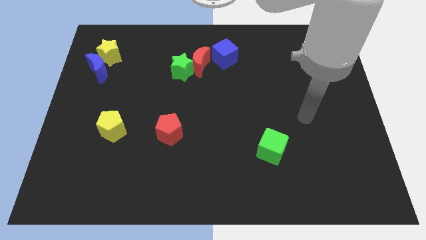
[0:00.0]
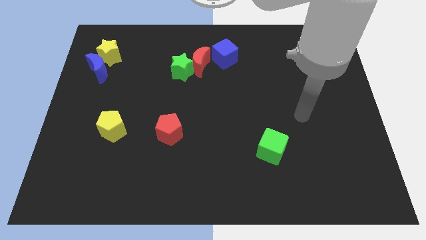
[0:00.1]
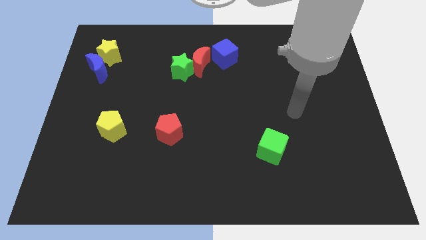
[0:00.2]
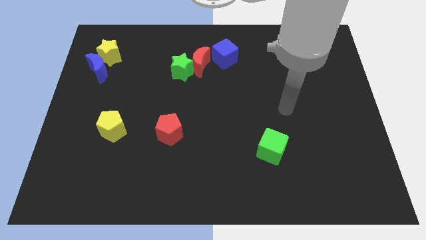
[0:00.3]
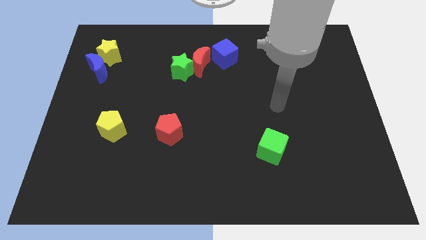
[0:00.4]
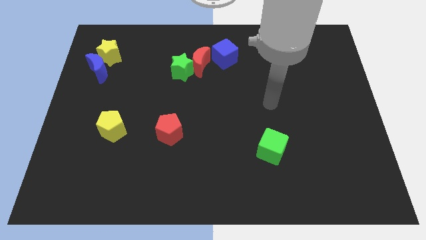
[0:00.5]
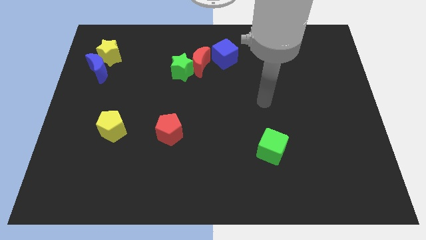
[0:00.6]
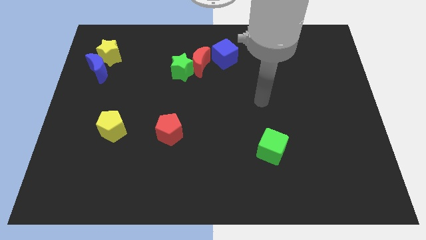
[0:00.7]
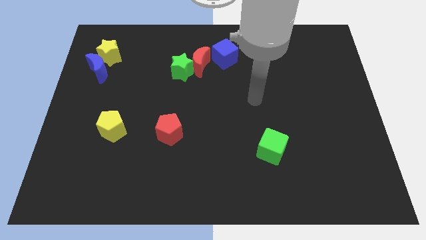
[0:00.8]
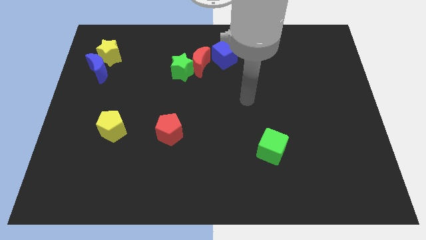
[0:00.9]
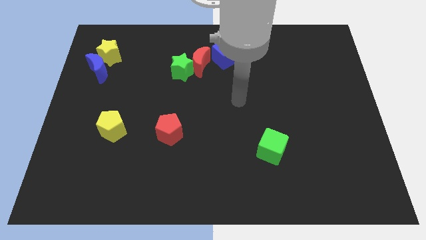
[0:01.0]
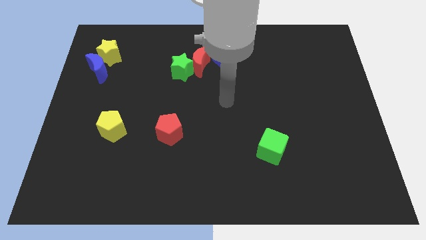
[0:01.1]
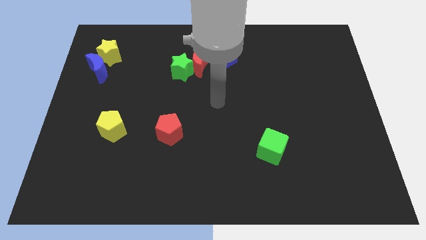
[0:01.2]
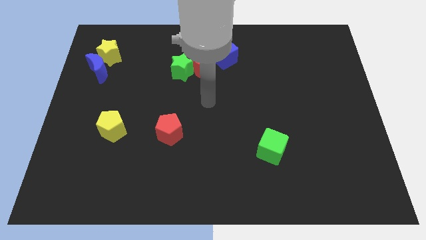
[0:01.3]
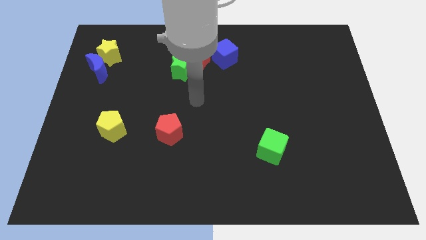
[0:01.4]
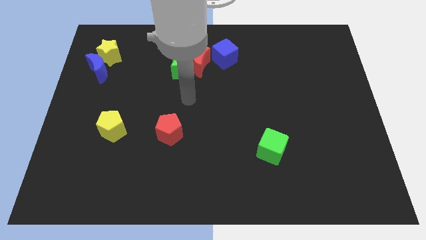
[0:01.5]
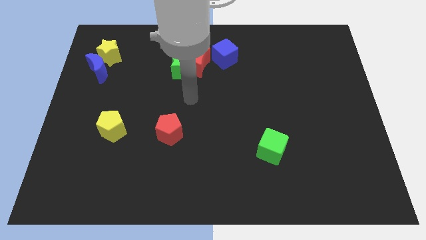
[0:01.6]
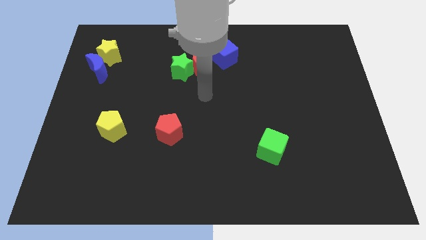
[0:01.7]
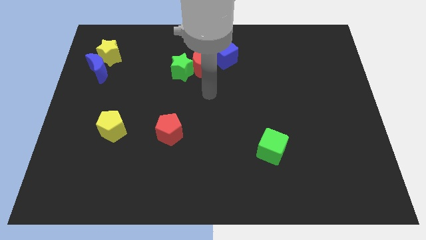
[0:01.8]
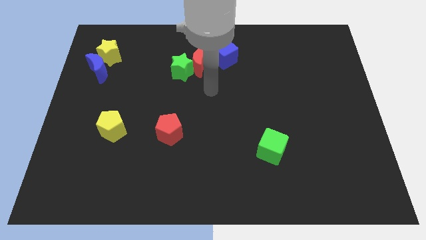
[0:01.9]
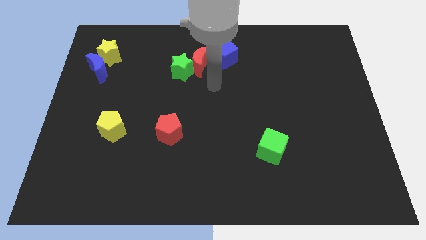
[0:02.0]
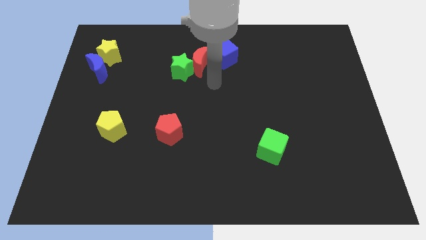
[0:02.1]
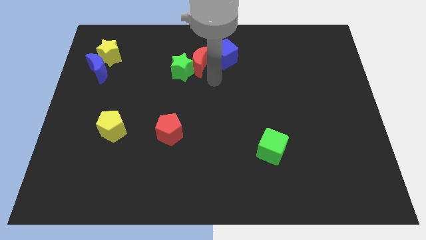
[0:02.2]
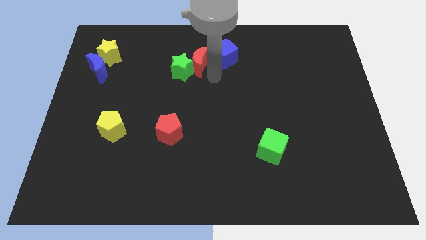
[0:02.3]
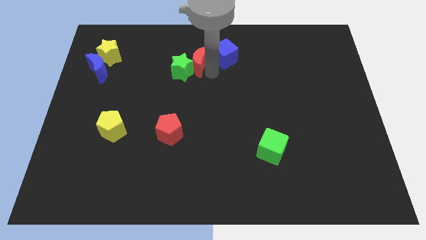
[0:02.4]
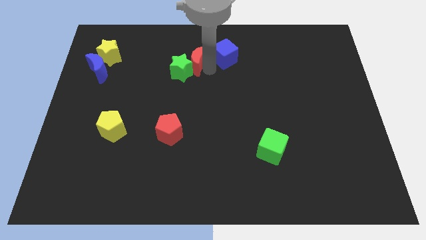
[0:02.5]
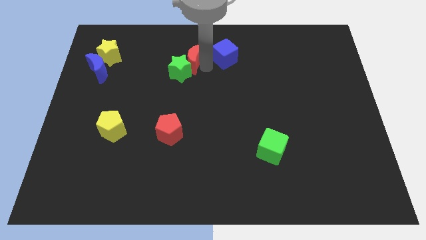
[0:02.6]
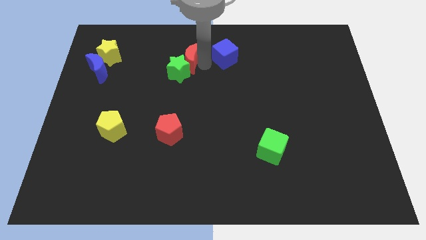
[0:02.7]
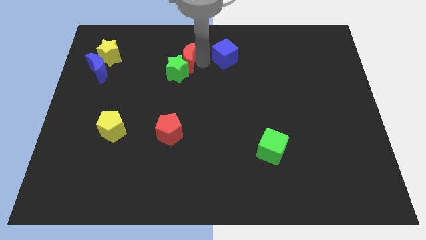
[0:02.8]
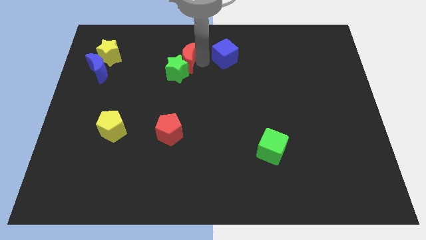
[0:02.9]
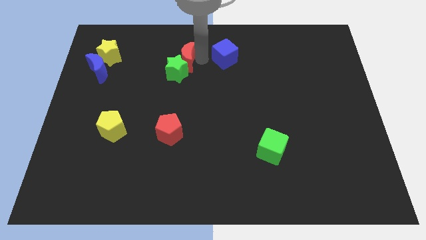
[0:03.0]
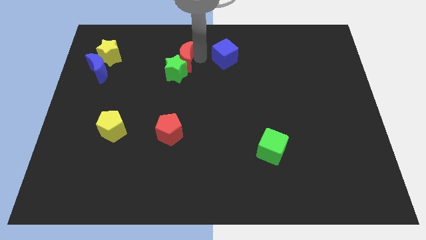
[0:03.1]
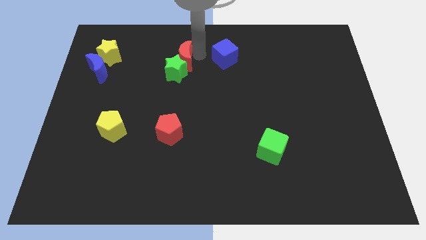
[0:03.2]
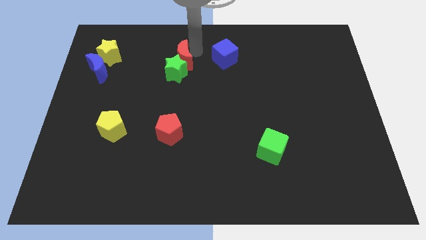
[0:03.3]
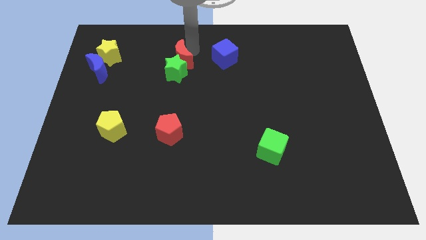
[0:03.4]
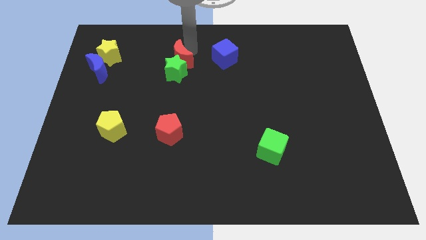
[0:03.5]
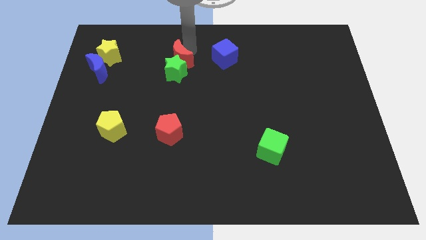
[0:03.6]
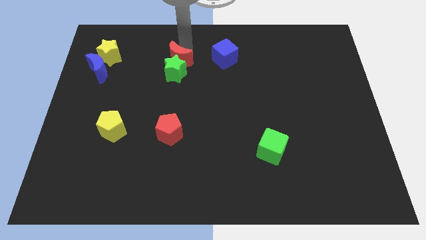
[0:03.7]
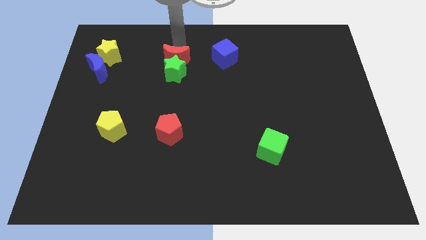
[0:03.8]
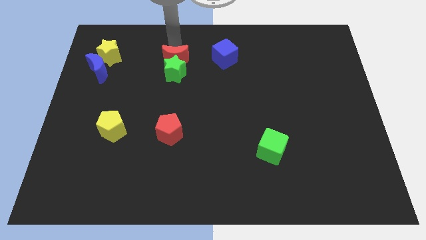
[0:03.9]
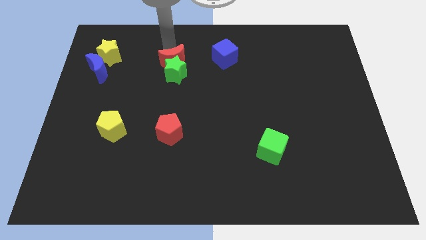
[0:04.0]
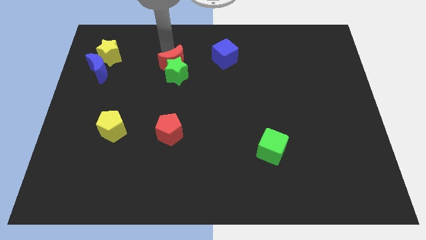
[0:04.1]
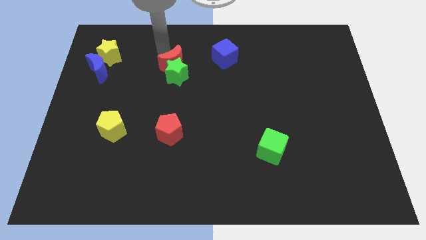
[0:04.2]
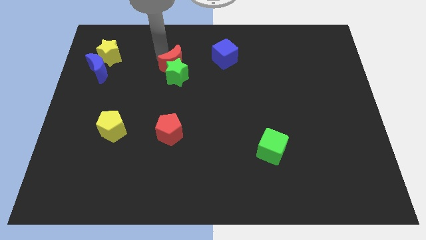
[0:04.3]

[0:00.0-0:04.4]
move red crescent to the top green star

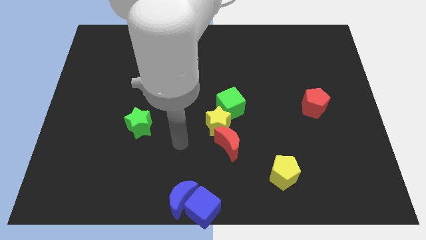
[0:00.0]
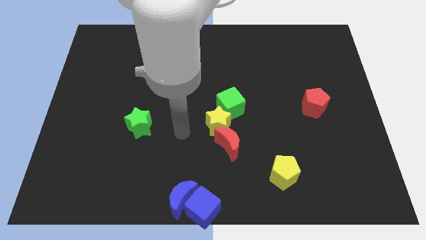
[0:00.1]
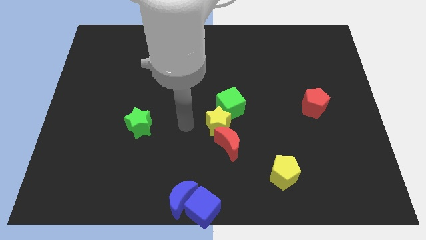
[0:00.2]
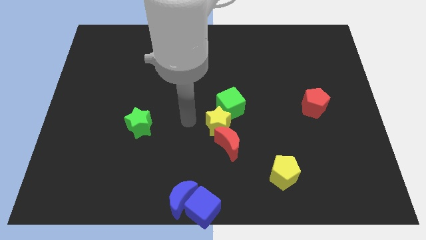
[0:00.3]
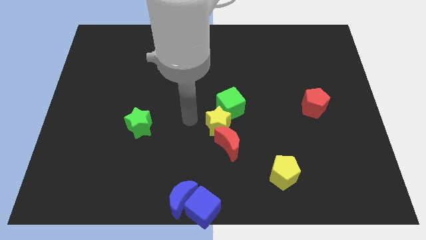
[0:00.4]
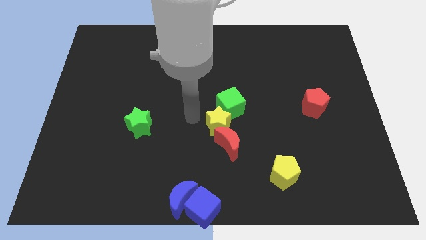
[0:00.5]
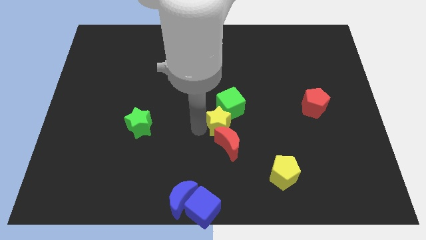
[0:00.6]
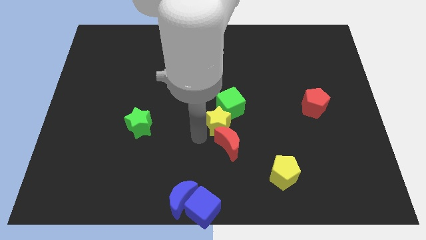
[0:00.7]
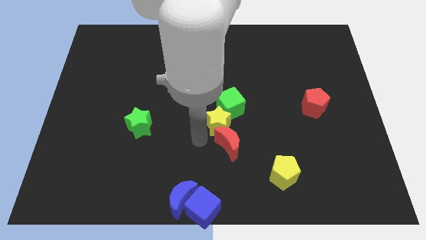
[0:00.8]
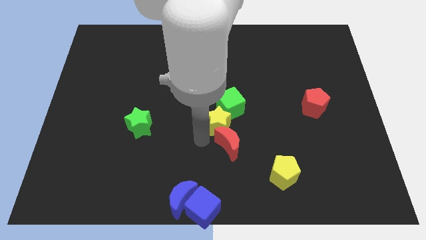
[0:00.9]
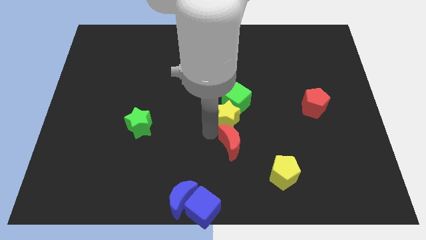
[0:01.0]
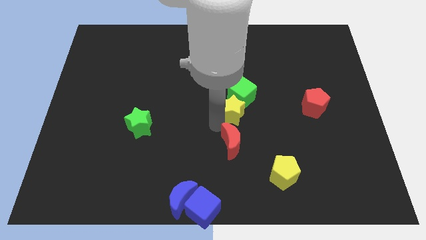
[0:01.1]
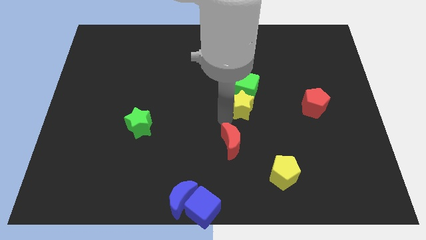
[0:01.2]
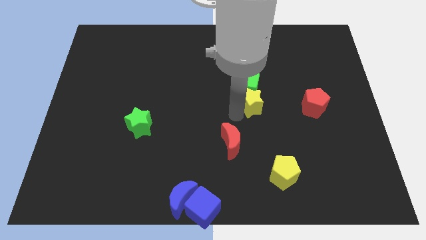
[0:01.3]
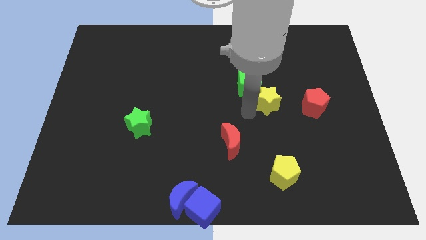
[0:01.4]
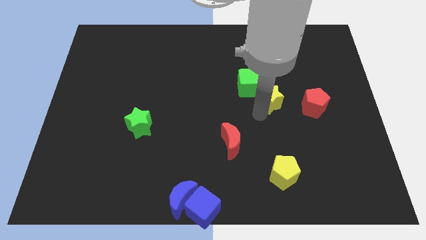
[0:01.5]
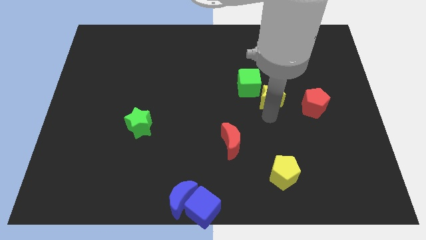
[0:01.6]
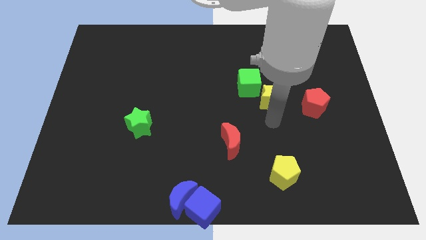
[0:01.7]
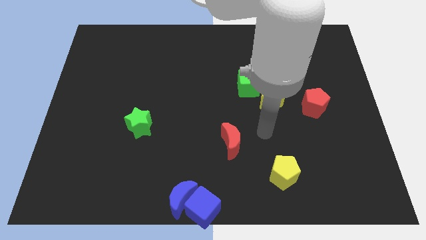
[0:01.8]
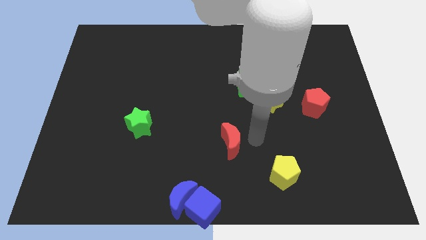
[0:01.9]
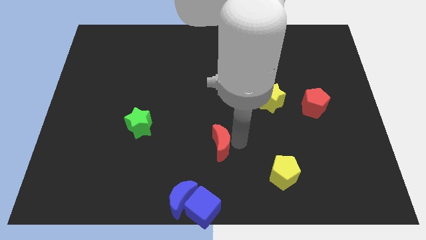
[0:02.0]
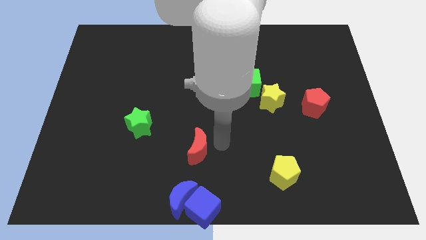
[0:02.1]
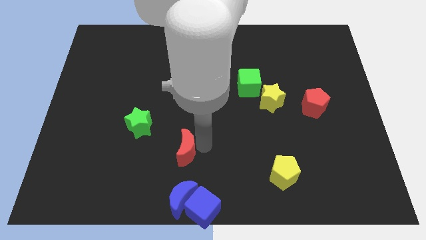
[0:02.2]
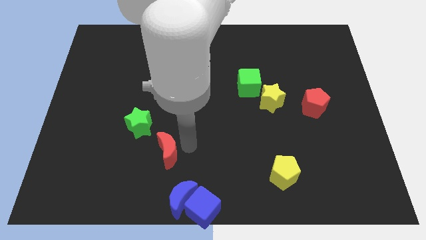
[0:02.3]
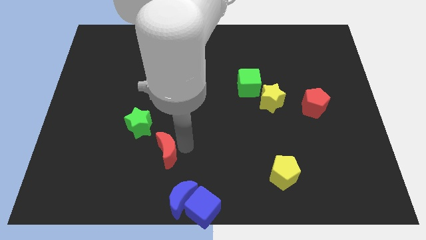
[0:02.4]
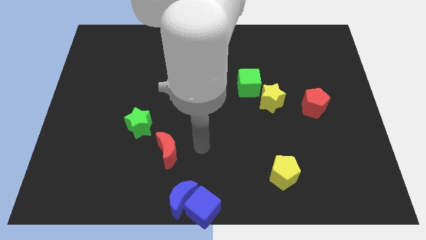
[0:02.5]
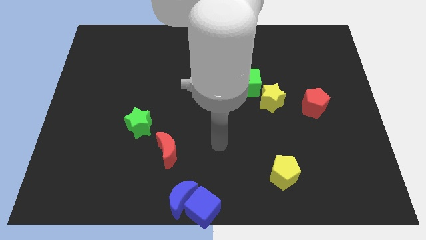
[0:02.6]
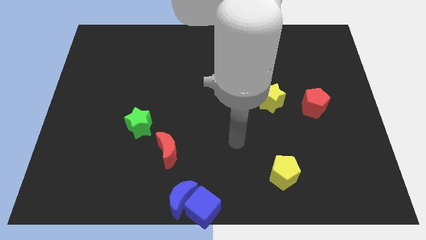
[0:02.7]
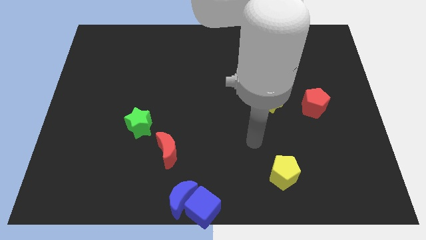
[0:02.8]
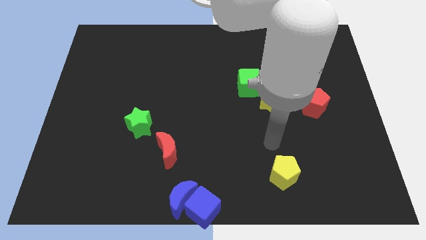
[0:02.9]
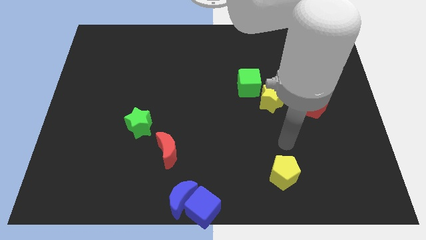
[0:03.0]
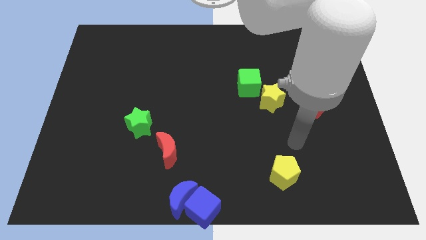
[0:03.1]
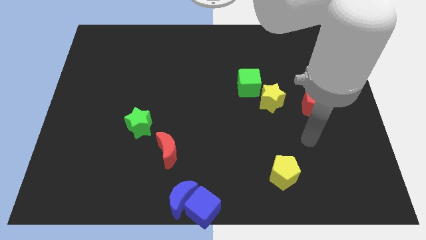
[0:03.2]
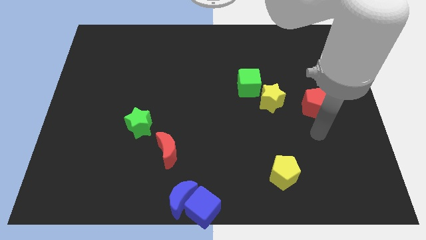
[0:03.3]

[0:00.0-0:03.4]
push the yellow star into the green cube

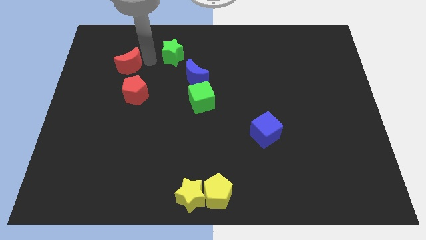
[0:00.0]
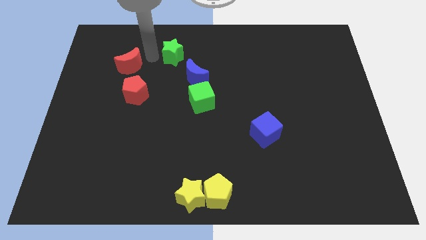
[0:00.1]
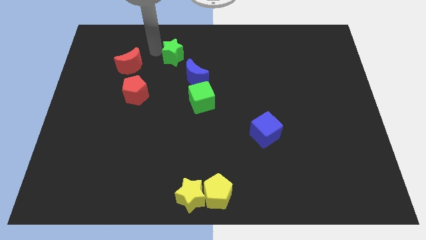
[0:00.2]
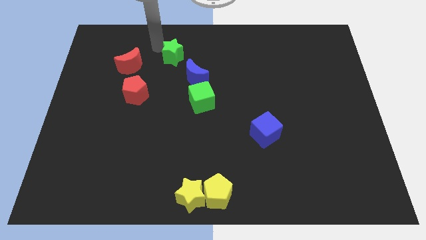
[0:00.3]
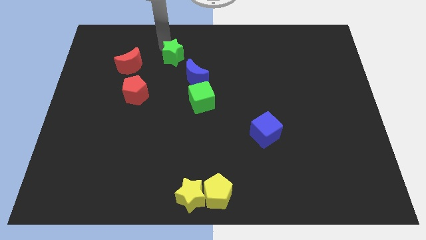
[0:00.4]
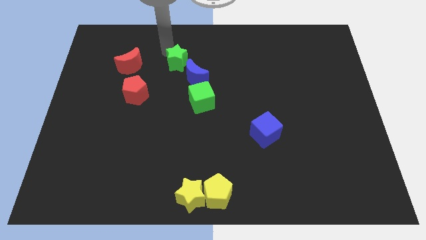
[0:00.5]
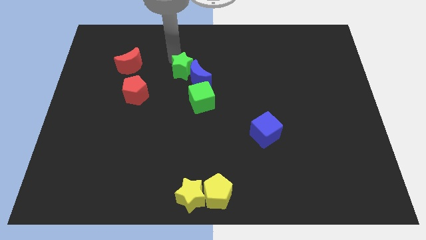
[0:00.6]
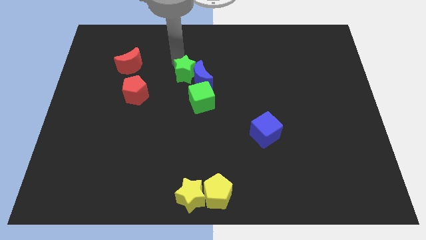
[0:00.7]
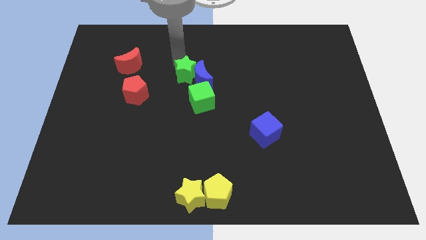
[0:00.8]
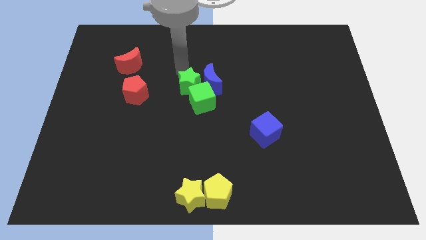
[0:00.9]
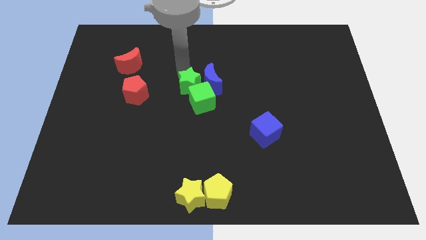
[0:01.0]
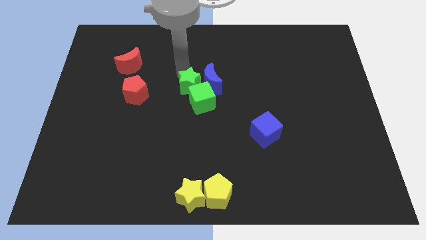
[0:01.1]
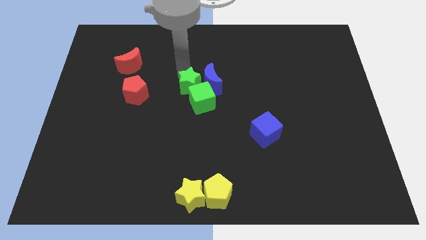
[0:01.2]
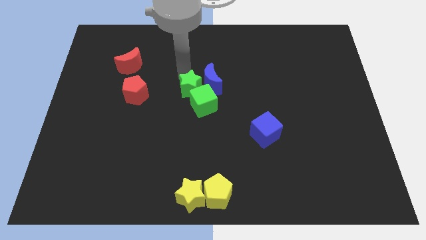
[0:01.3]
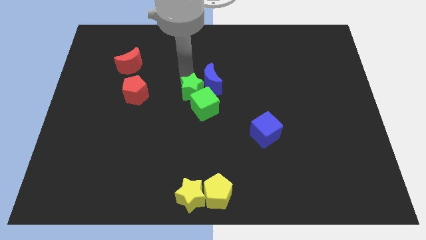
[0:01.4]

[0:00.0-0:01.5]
place green star above green cube
